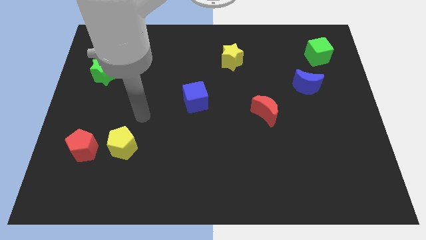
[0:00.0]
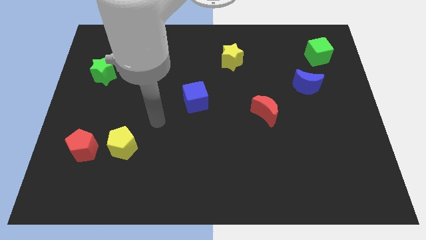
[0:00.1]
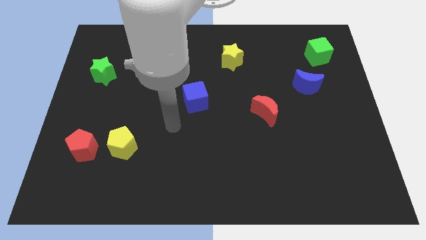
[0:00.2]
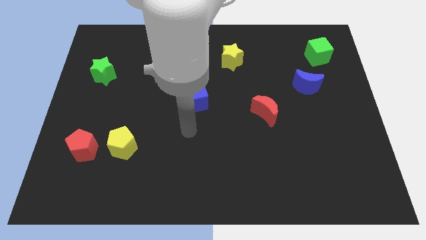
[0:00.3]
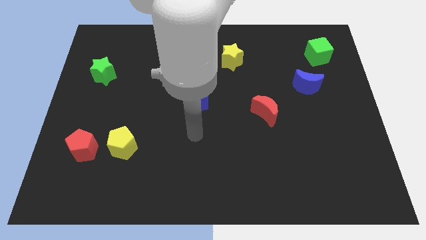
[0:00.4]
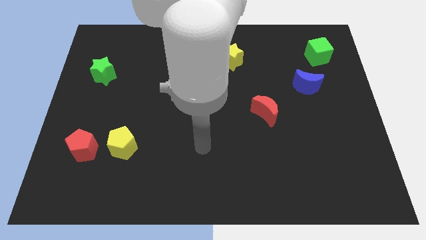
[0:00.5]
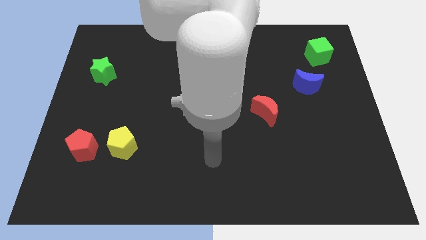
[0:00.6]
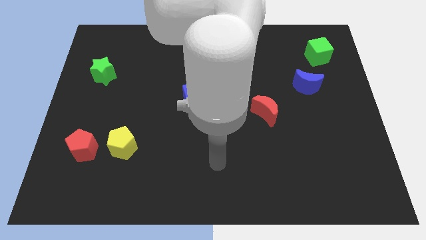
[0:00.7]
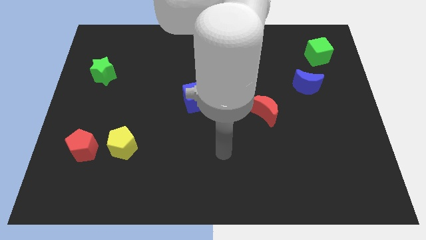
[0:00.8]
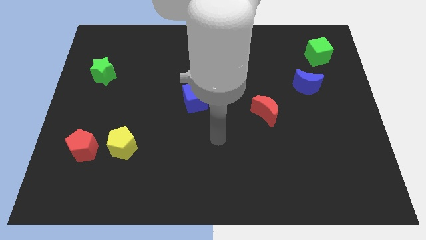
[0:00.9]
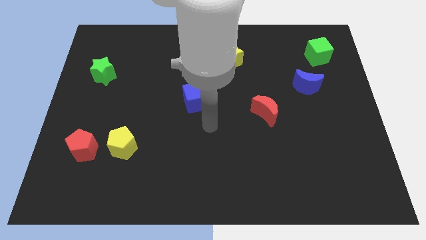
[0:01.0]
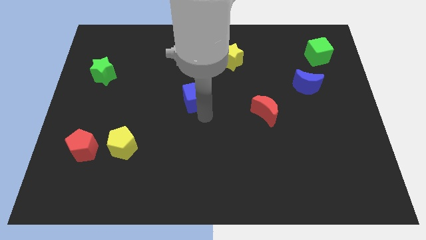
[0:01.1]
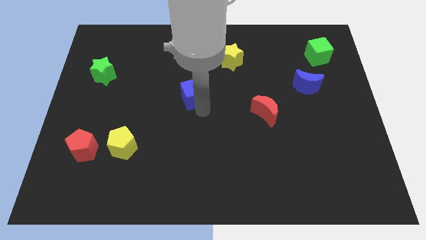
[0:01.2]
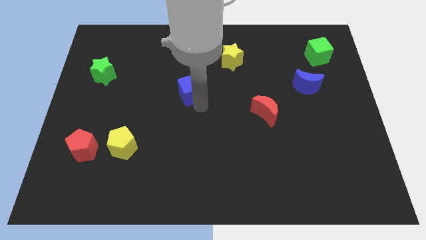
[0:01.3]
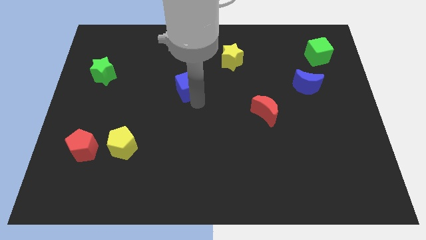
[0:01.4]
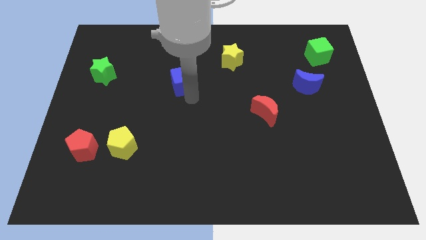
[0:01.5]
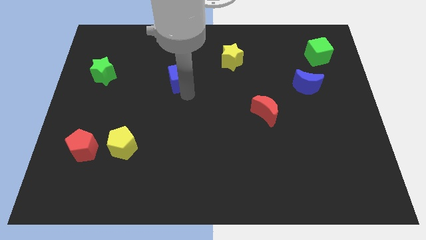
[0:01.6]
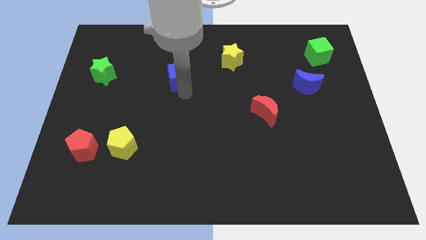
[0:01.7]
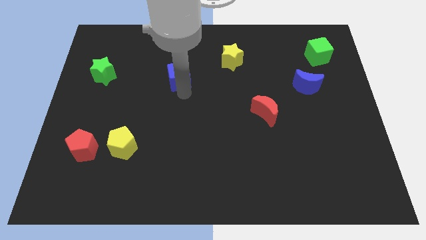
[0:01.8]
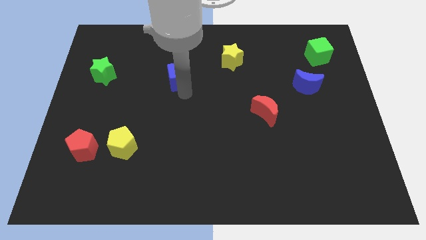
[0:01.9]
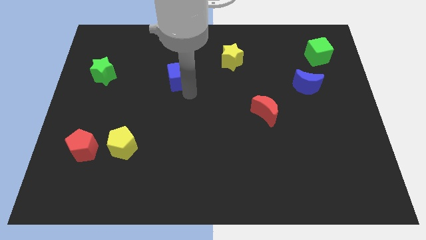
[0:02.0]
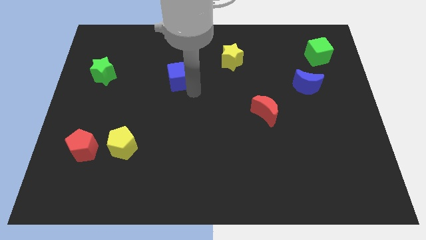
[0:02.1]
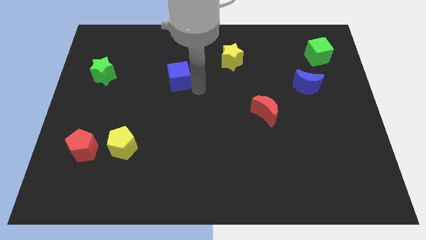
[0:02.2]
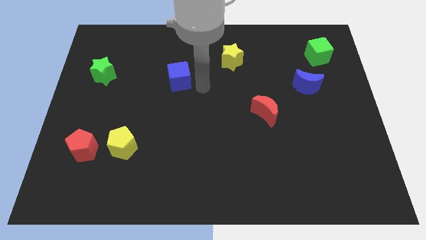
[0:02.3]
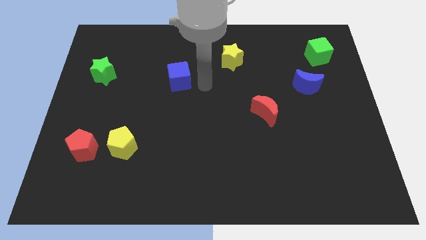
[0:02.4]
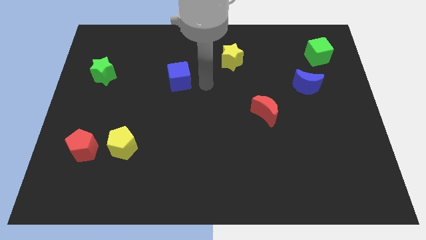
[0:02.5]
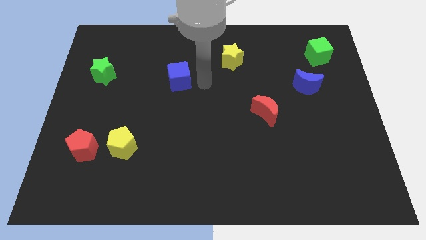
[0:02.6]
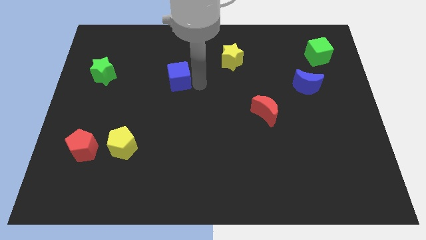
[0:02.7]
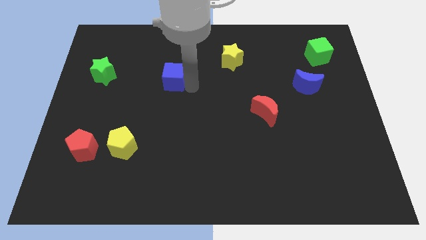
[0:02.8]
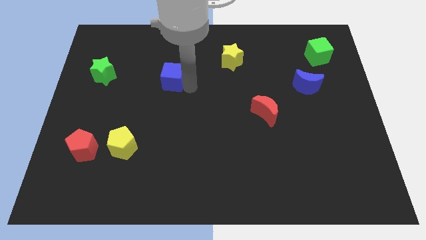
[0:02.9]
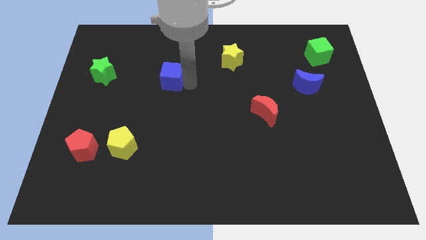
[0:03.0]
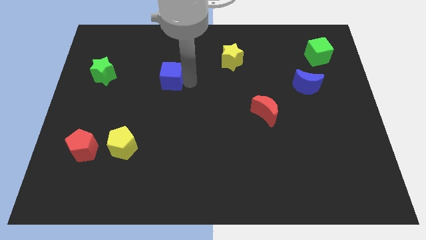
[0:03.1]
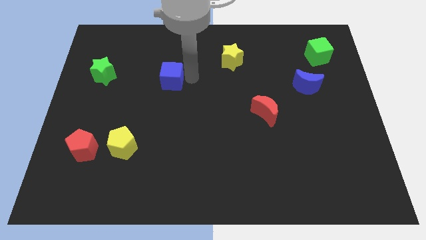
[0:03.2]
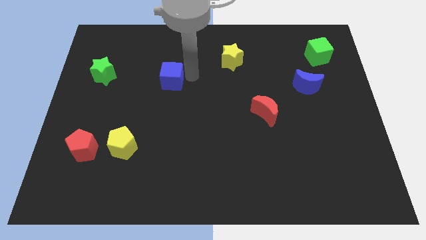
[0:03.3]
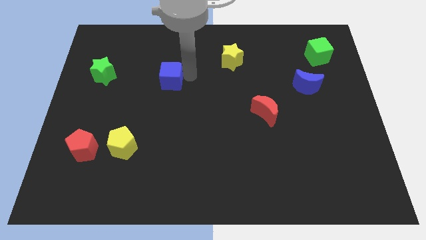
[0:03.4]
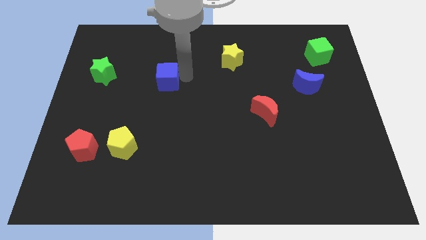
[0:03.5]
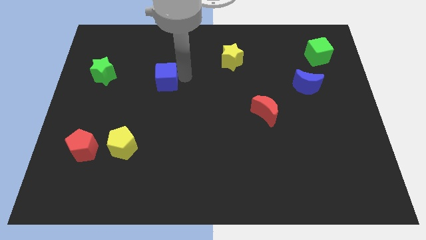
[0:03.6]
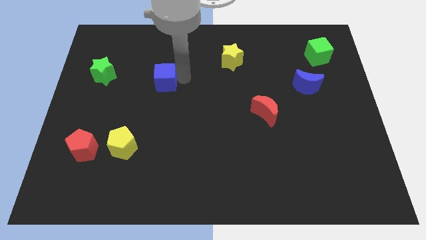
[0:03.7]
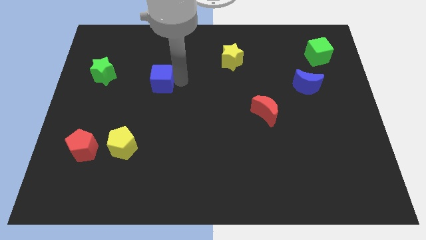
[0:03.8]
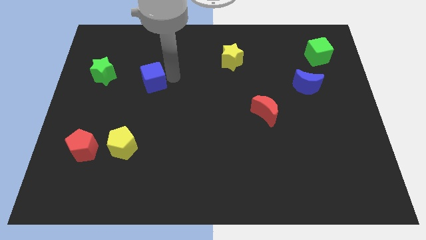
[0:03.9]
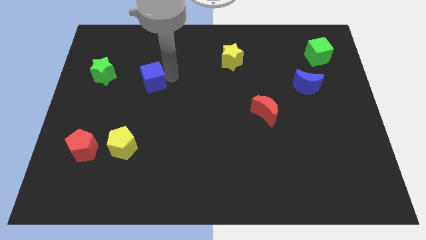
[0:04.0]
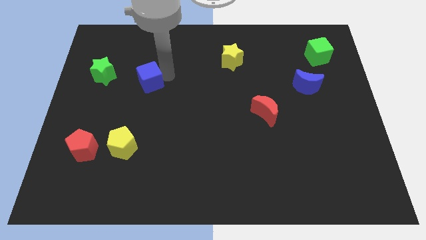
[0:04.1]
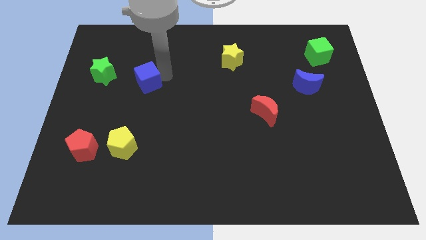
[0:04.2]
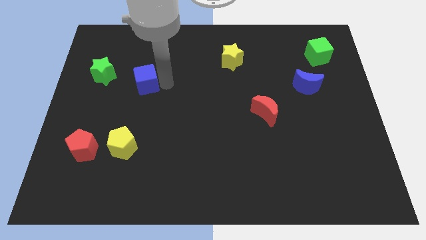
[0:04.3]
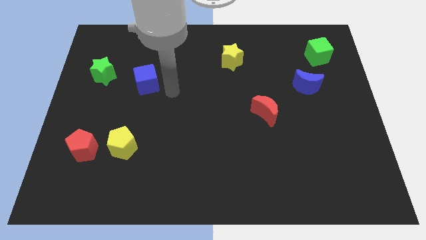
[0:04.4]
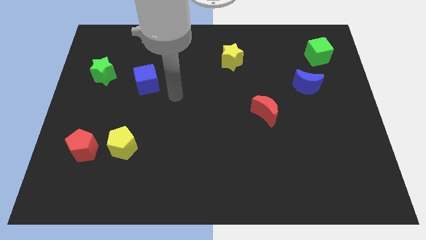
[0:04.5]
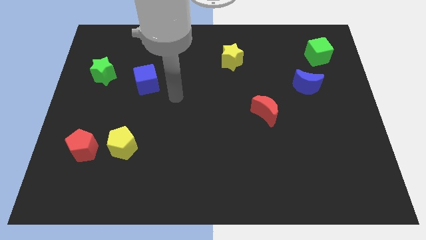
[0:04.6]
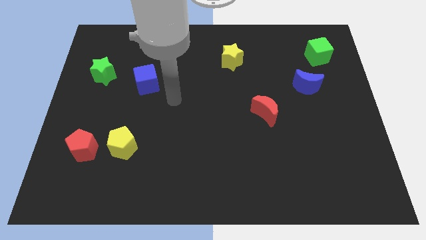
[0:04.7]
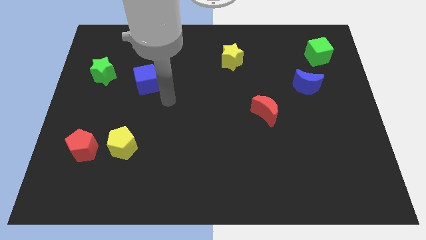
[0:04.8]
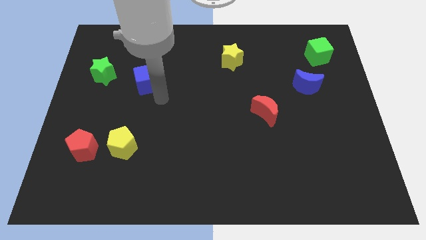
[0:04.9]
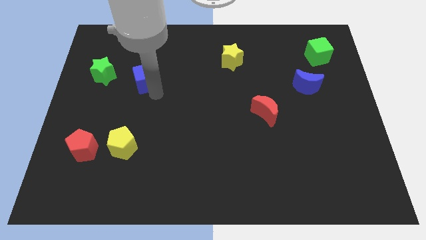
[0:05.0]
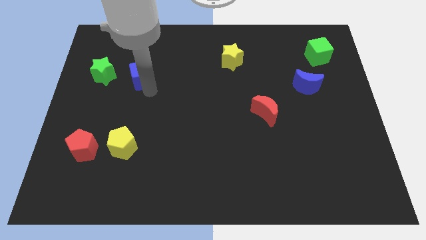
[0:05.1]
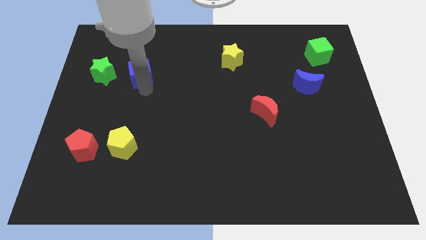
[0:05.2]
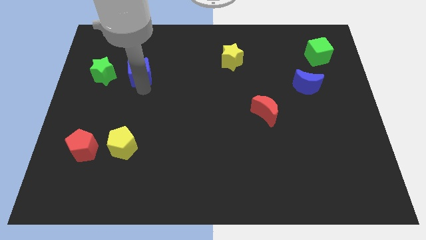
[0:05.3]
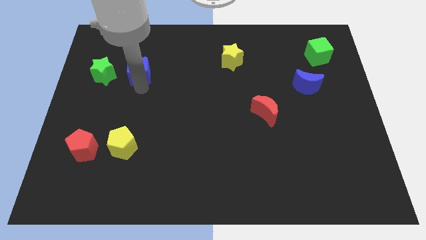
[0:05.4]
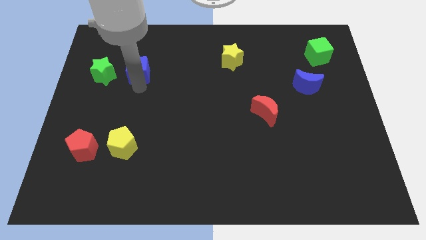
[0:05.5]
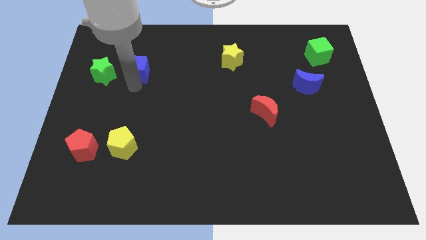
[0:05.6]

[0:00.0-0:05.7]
place the blue square to the right side of the green star

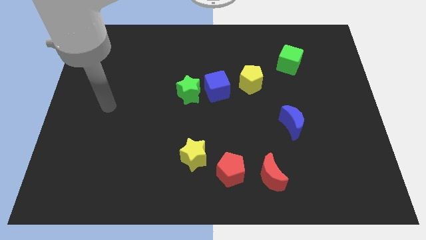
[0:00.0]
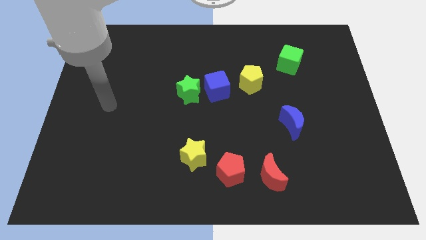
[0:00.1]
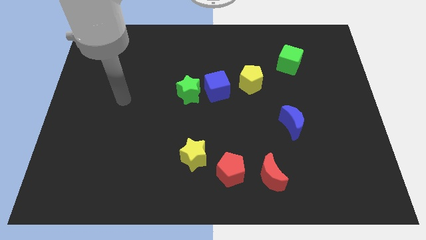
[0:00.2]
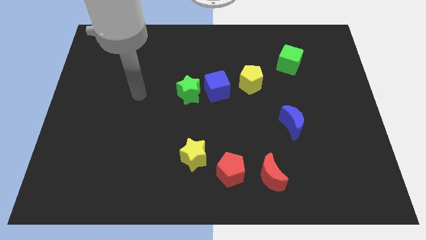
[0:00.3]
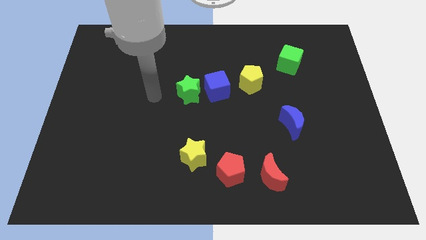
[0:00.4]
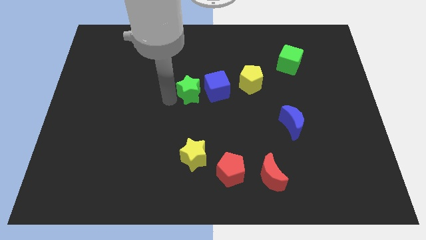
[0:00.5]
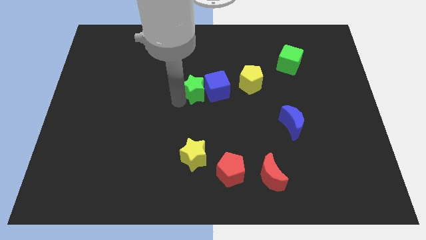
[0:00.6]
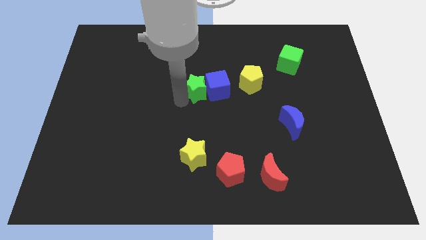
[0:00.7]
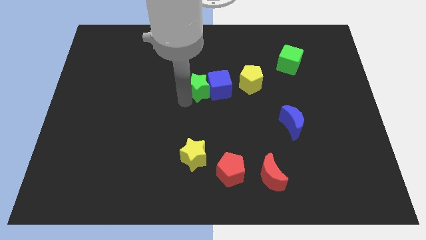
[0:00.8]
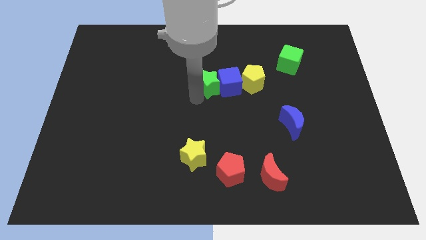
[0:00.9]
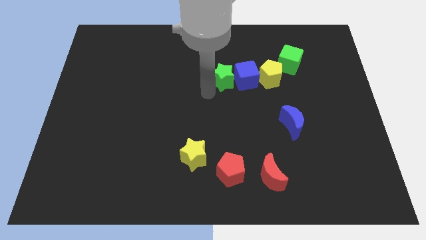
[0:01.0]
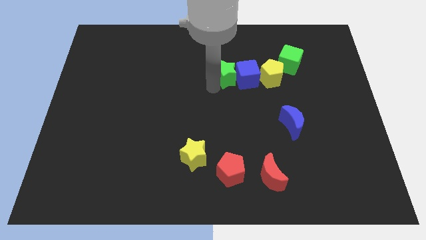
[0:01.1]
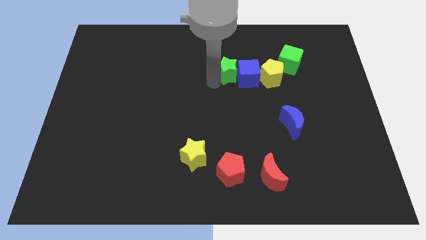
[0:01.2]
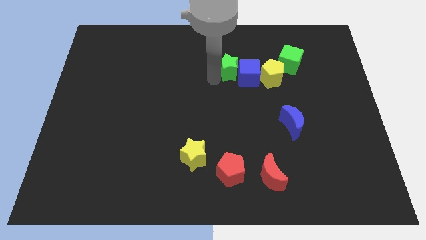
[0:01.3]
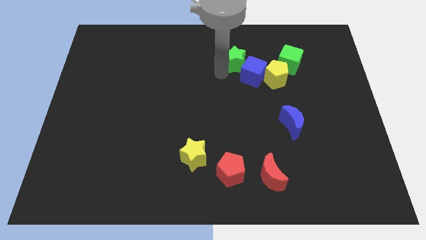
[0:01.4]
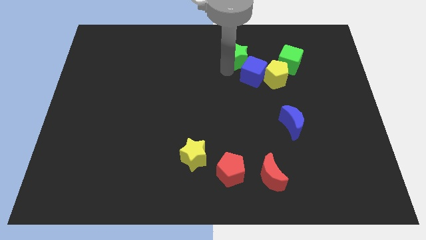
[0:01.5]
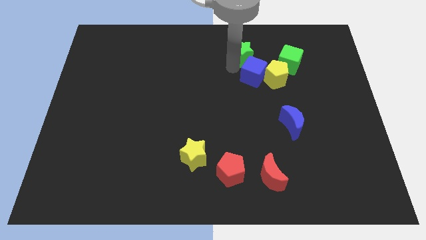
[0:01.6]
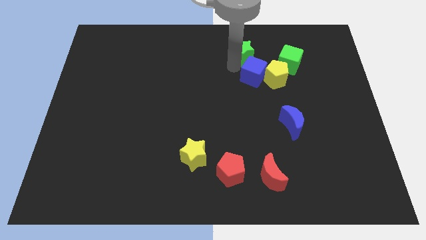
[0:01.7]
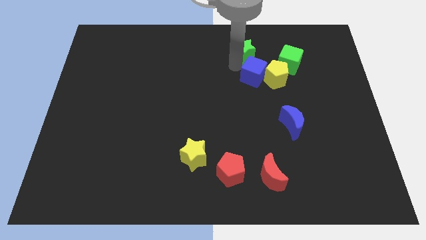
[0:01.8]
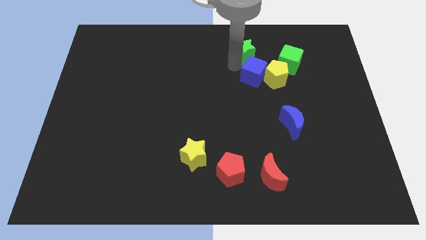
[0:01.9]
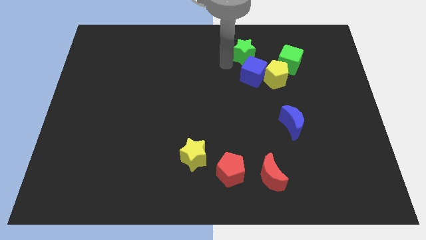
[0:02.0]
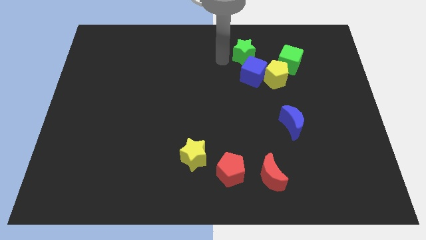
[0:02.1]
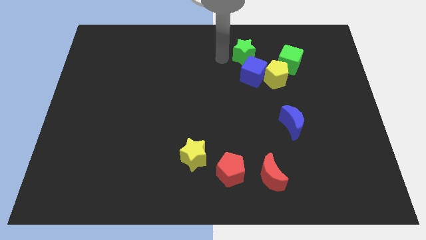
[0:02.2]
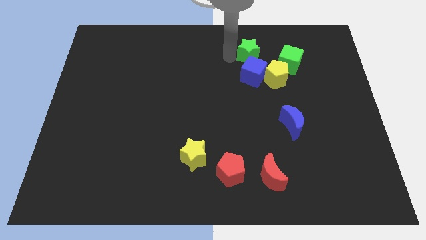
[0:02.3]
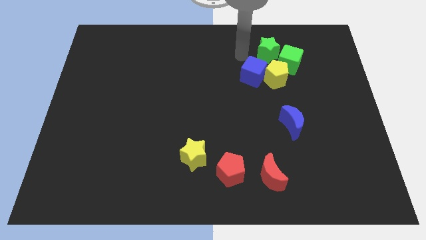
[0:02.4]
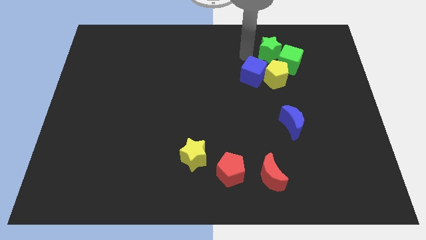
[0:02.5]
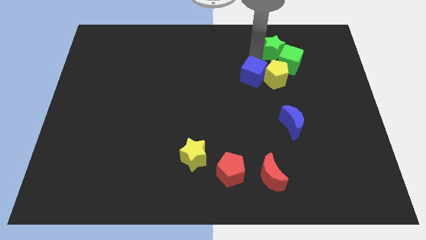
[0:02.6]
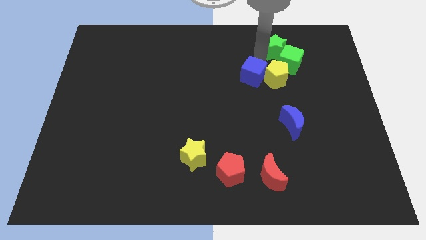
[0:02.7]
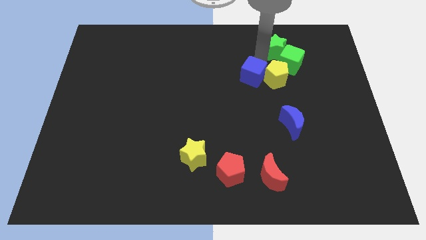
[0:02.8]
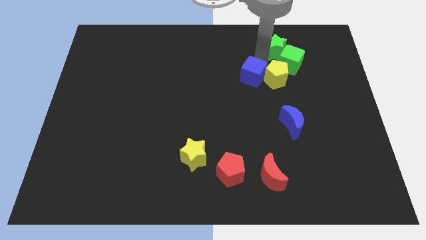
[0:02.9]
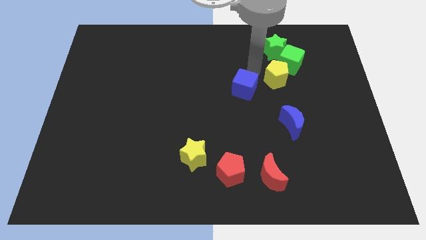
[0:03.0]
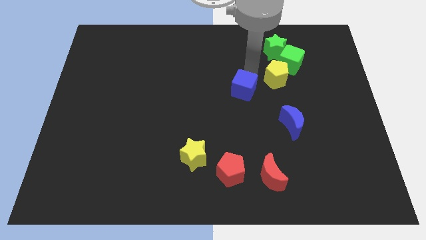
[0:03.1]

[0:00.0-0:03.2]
move the green star close to green cube
